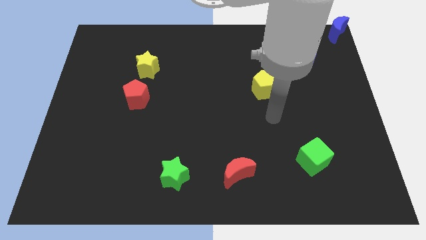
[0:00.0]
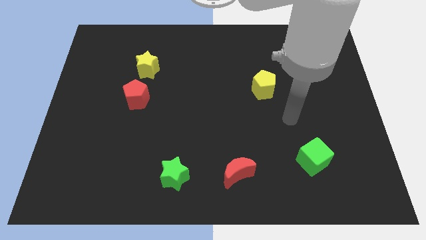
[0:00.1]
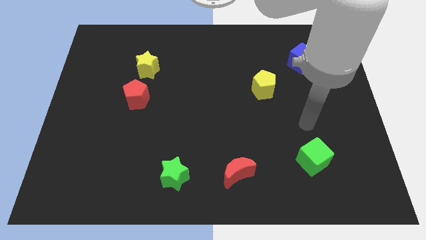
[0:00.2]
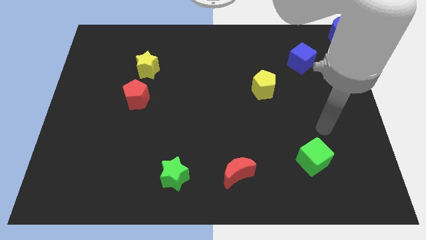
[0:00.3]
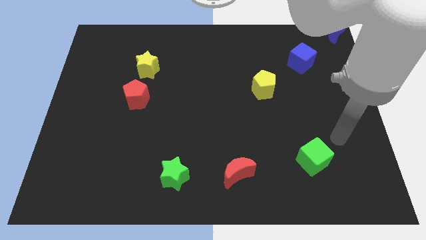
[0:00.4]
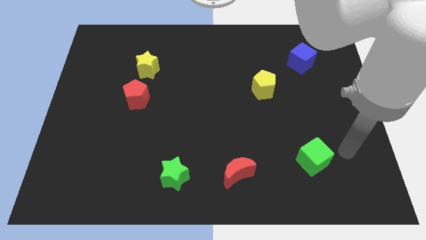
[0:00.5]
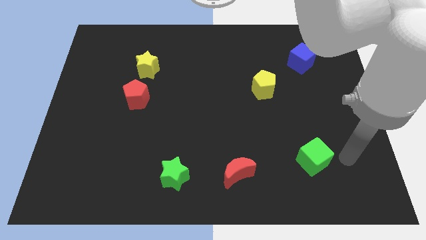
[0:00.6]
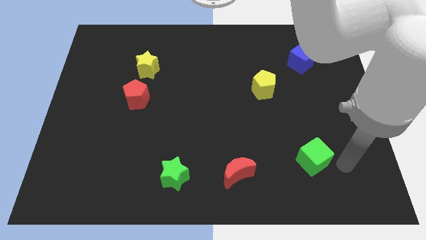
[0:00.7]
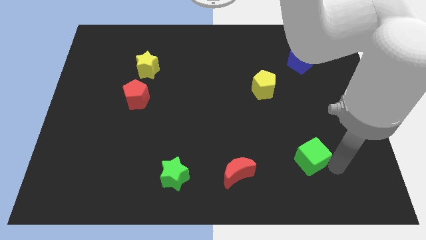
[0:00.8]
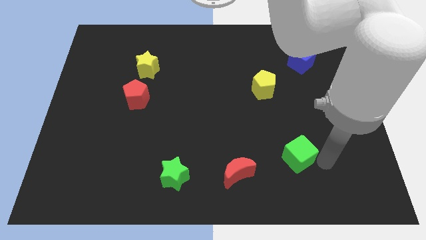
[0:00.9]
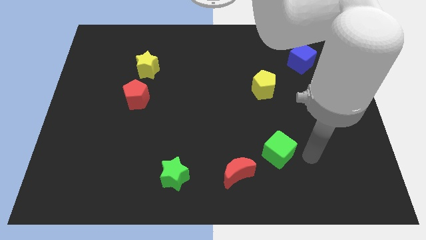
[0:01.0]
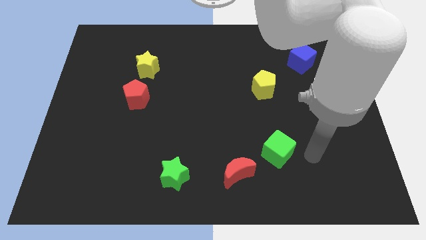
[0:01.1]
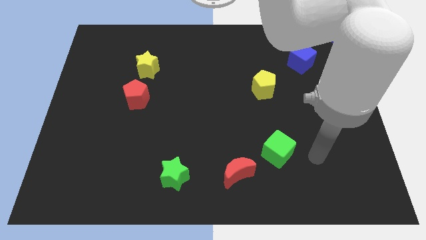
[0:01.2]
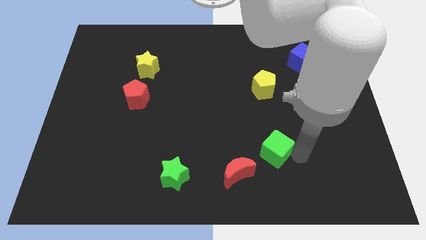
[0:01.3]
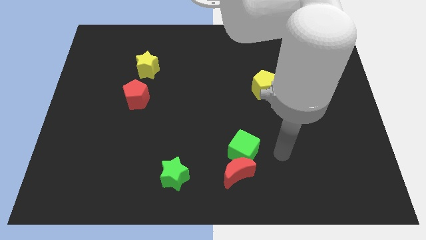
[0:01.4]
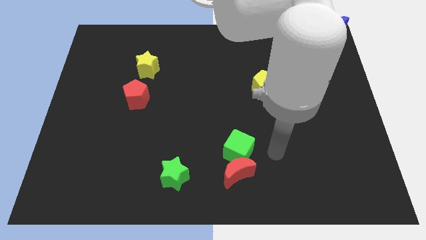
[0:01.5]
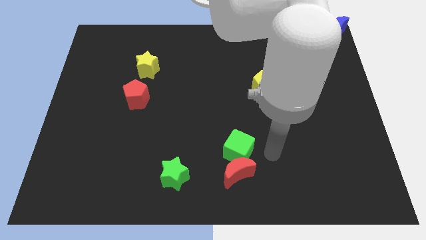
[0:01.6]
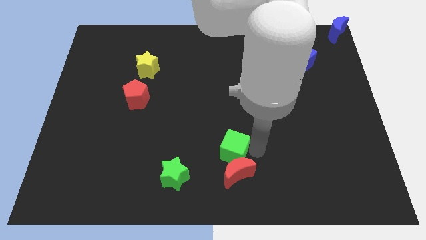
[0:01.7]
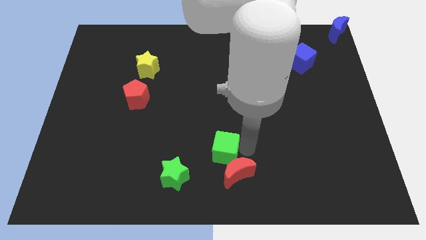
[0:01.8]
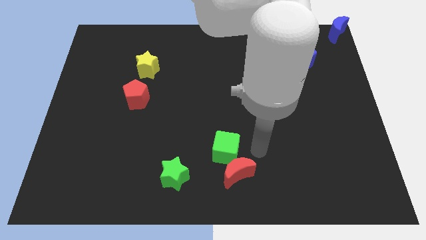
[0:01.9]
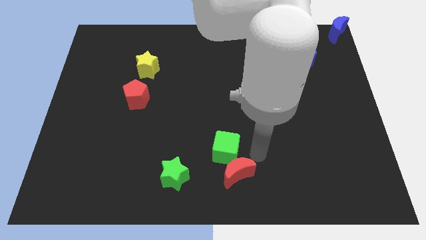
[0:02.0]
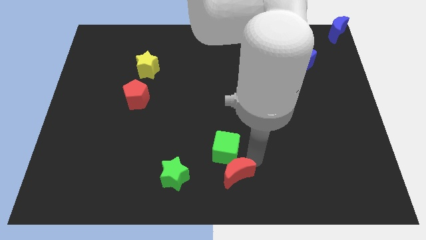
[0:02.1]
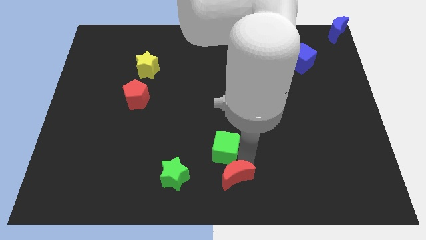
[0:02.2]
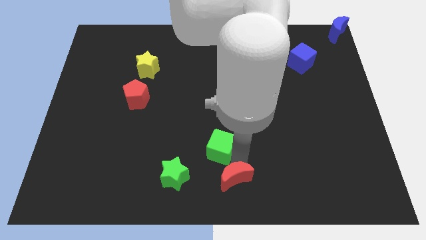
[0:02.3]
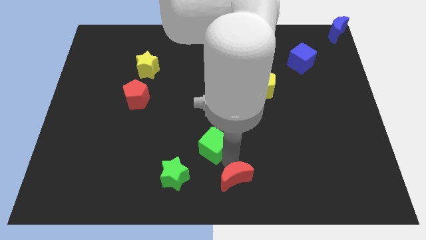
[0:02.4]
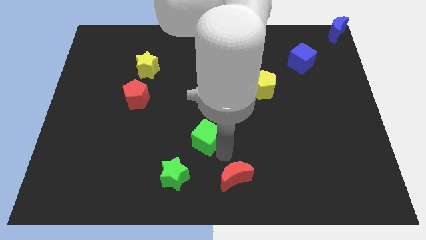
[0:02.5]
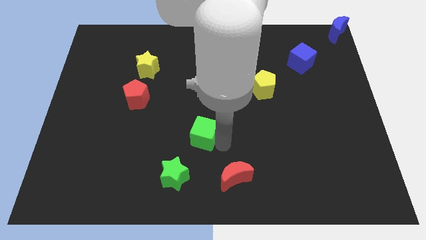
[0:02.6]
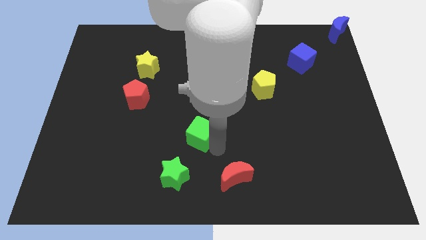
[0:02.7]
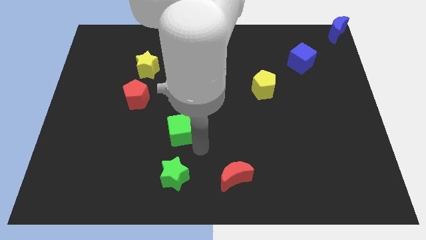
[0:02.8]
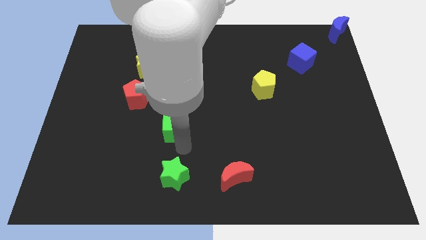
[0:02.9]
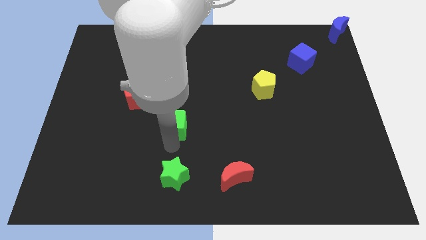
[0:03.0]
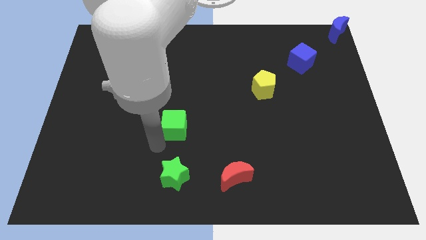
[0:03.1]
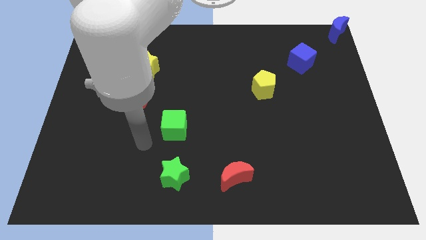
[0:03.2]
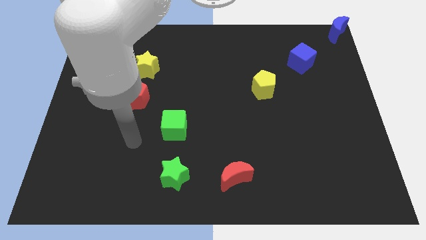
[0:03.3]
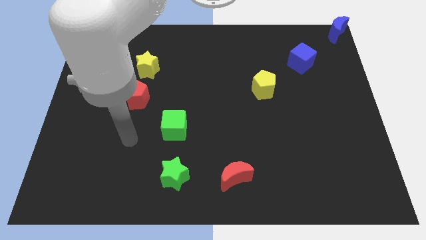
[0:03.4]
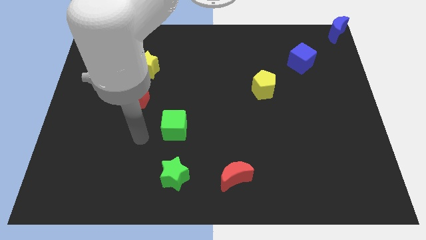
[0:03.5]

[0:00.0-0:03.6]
push the green cube vertically above the green star

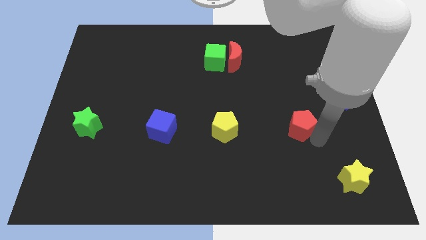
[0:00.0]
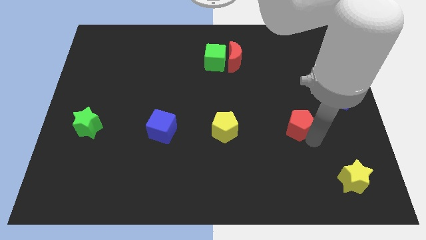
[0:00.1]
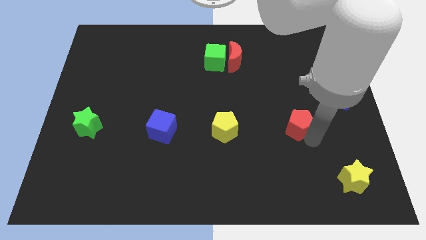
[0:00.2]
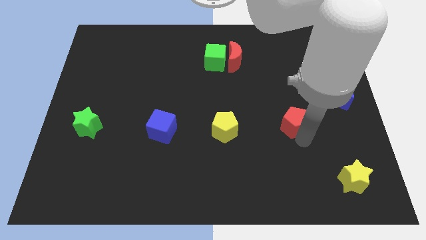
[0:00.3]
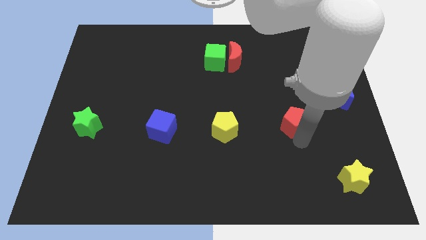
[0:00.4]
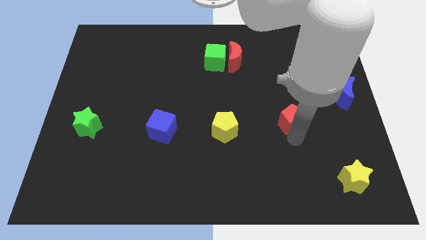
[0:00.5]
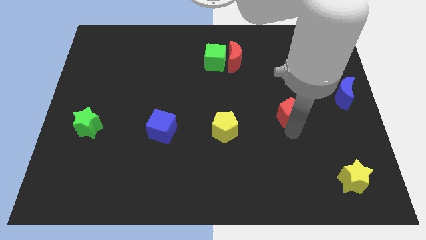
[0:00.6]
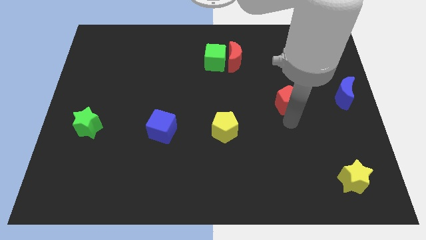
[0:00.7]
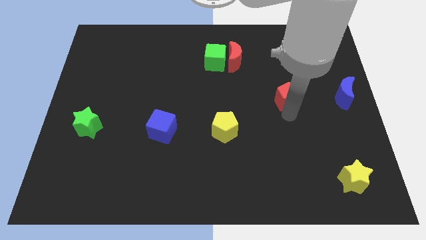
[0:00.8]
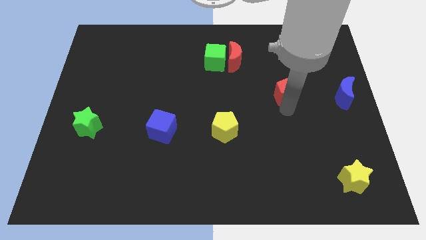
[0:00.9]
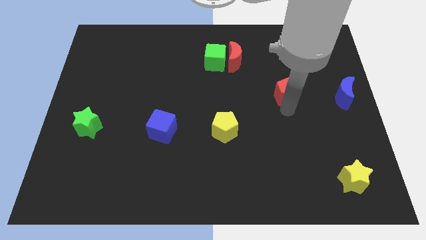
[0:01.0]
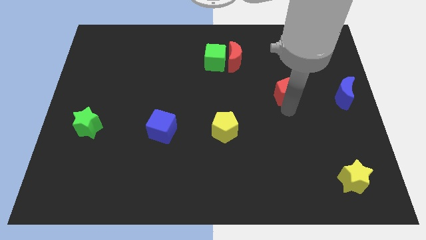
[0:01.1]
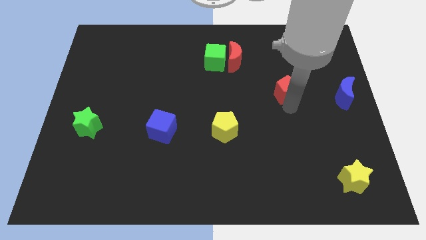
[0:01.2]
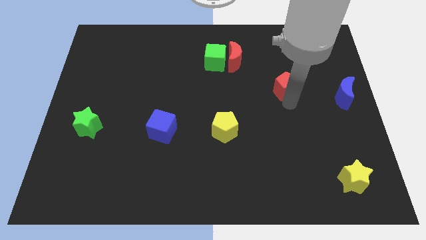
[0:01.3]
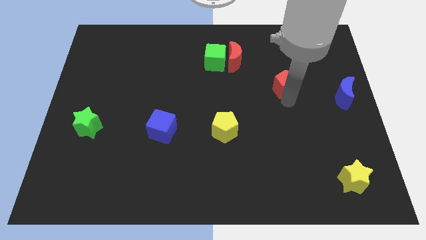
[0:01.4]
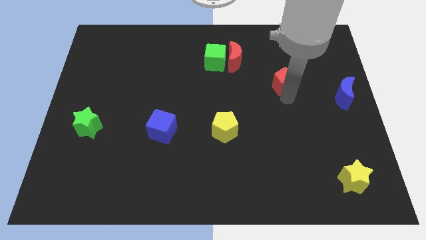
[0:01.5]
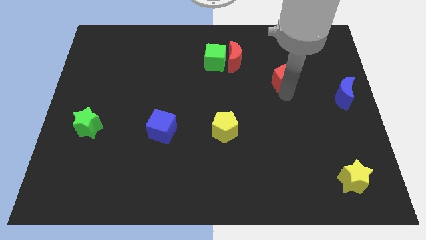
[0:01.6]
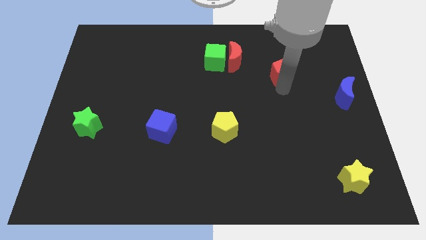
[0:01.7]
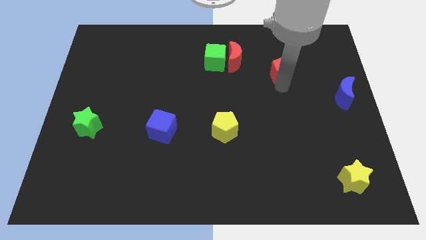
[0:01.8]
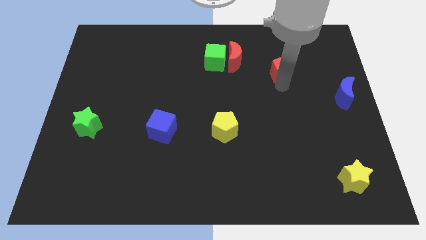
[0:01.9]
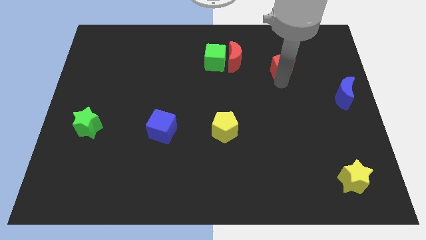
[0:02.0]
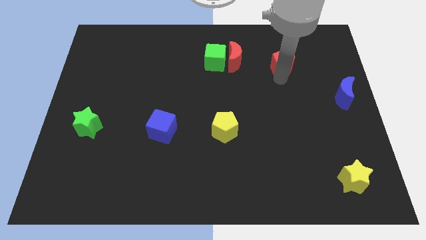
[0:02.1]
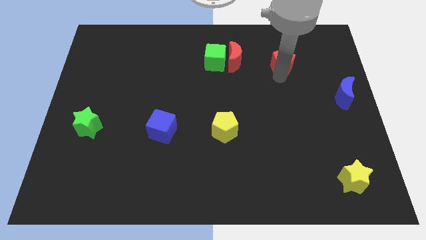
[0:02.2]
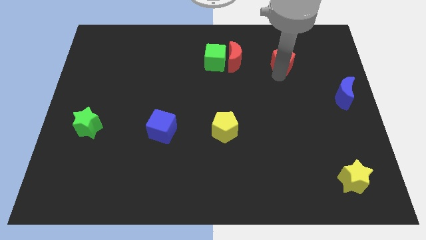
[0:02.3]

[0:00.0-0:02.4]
drag the red pentagon to the right side of the red moon

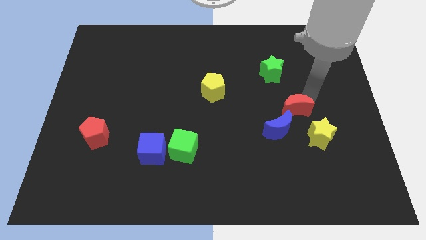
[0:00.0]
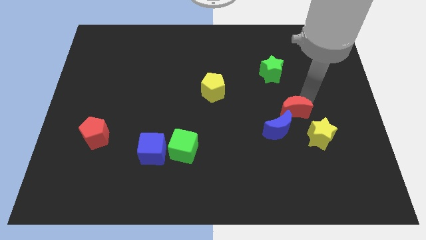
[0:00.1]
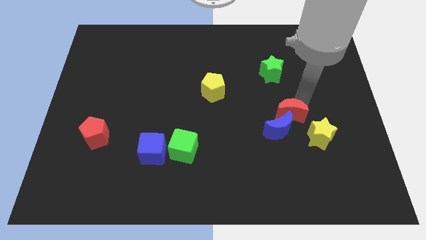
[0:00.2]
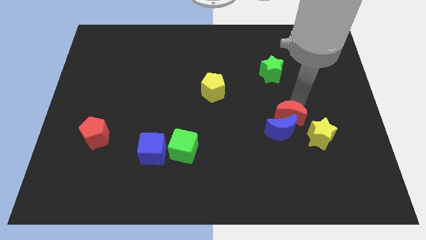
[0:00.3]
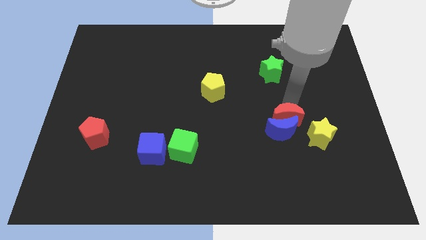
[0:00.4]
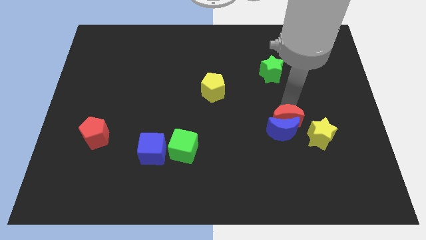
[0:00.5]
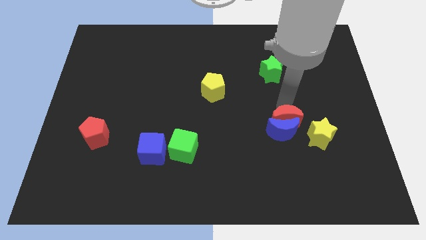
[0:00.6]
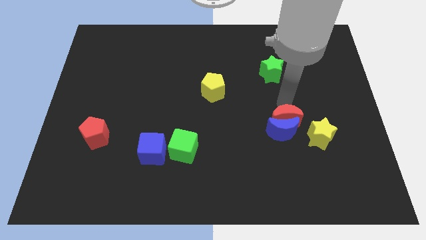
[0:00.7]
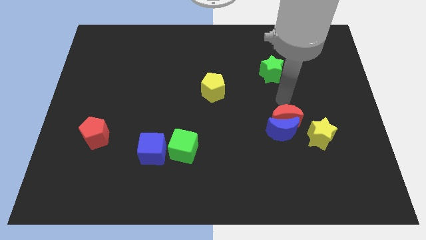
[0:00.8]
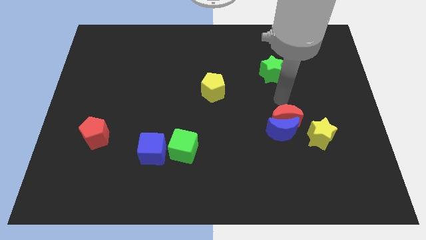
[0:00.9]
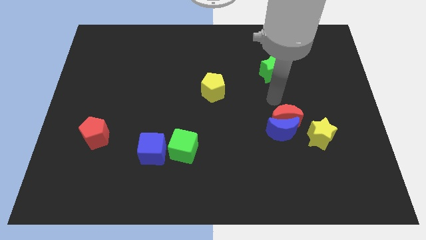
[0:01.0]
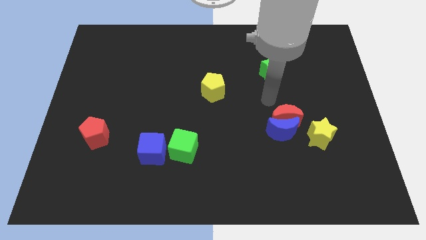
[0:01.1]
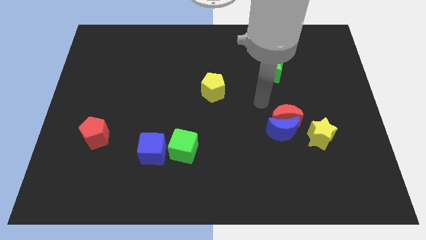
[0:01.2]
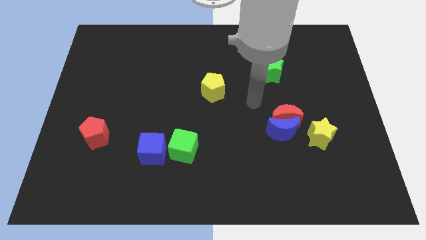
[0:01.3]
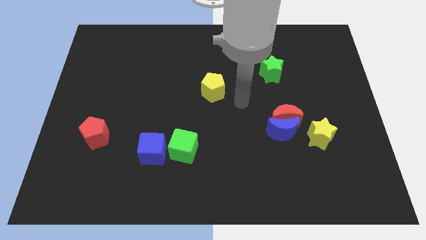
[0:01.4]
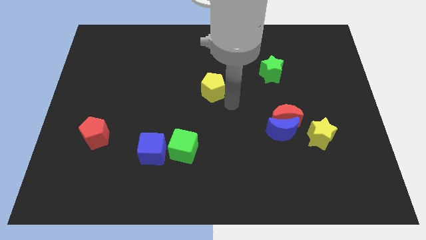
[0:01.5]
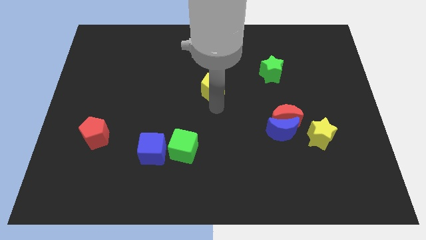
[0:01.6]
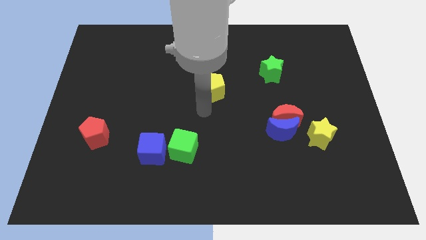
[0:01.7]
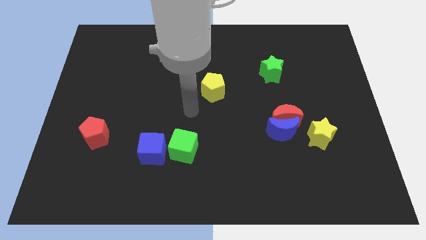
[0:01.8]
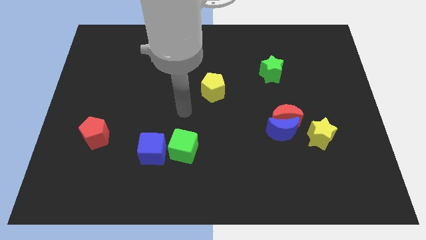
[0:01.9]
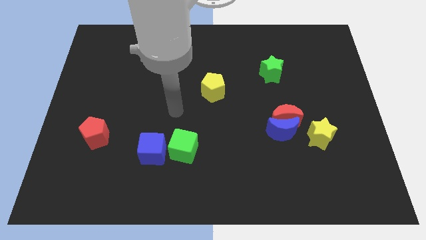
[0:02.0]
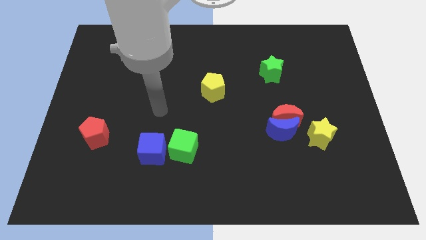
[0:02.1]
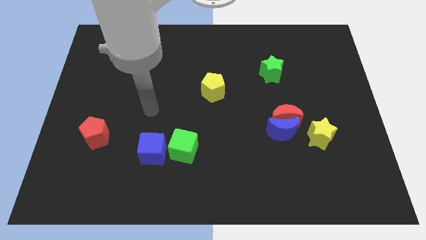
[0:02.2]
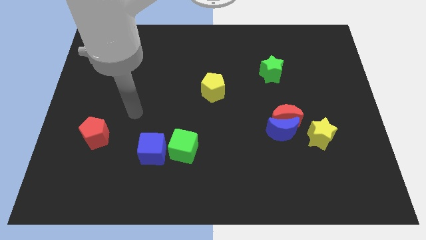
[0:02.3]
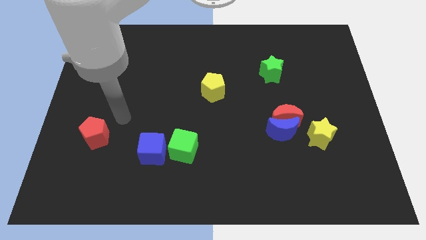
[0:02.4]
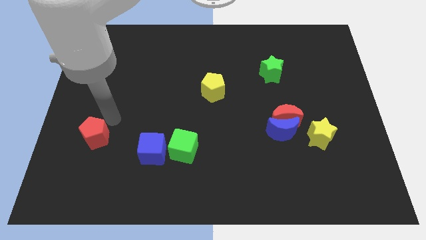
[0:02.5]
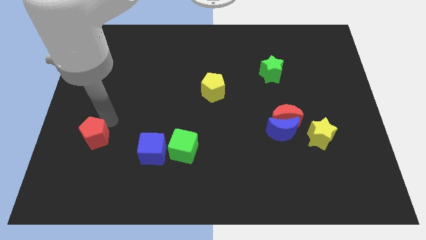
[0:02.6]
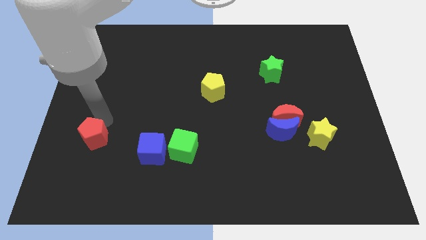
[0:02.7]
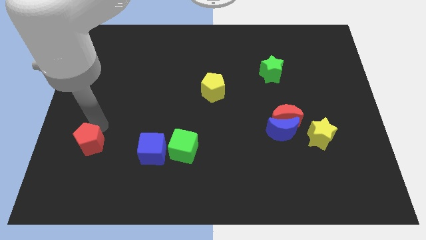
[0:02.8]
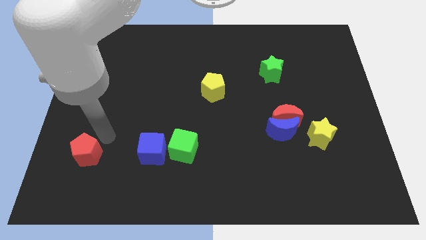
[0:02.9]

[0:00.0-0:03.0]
move your arm away from the red crescent

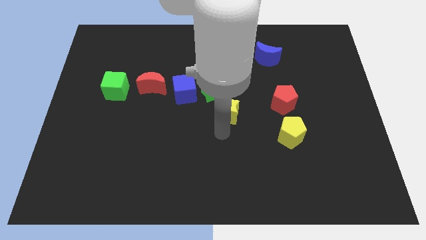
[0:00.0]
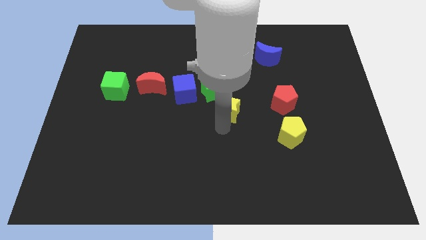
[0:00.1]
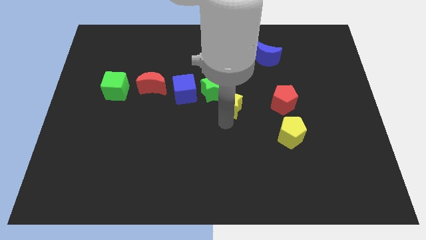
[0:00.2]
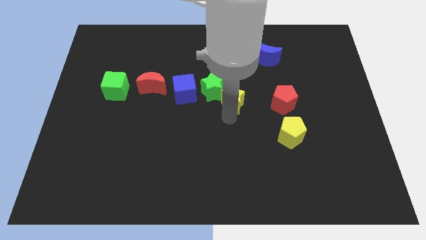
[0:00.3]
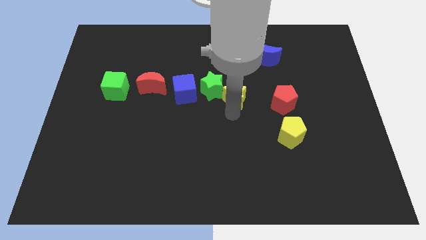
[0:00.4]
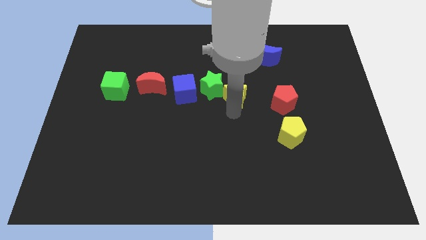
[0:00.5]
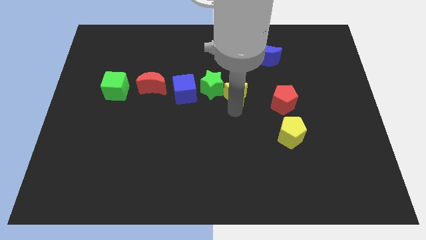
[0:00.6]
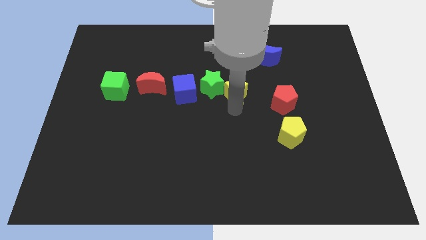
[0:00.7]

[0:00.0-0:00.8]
push yellow star in to green star
